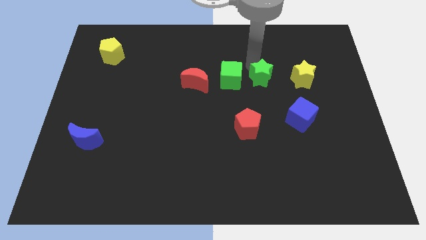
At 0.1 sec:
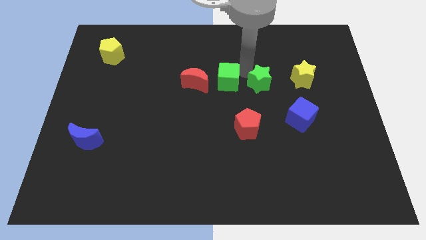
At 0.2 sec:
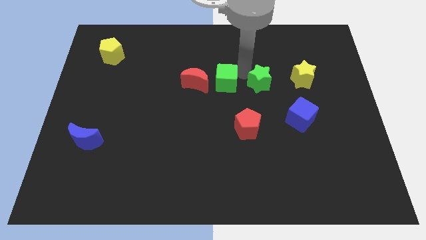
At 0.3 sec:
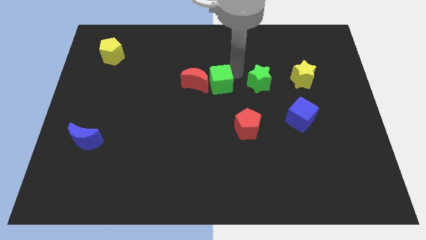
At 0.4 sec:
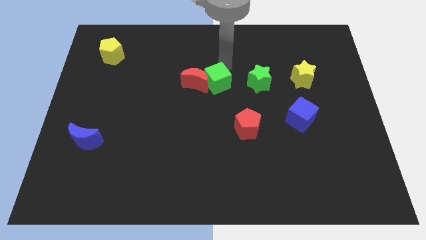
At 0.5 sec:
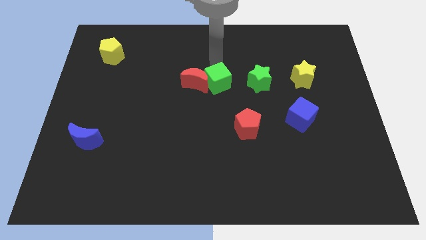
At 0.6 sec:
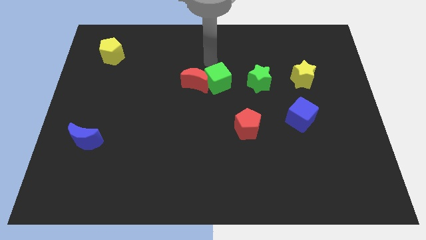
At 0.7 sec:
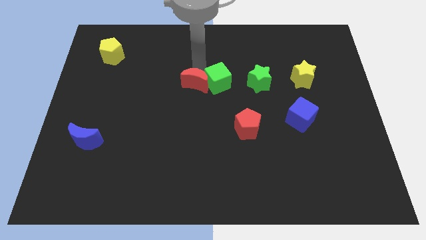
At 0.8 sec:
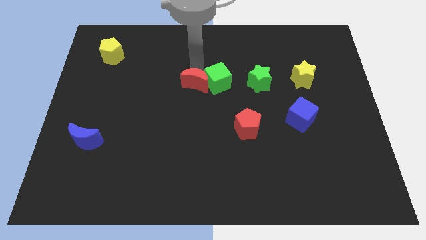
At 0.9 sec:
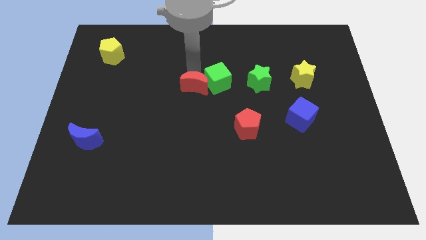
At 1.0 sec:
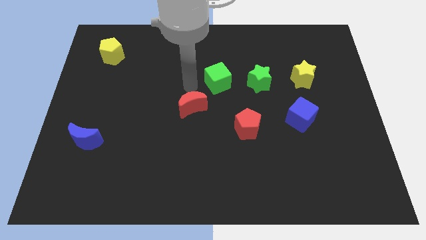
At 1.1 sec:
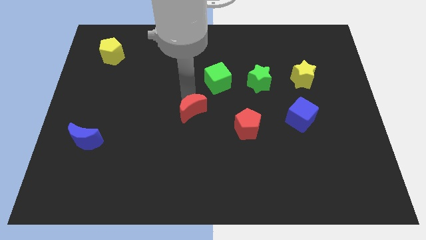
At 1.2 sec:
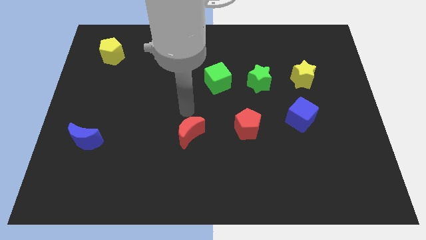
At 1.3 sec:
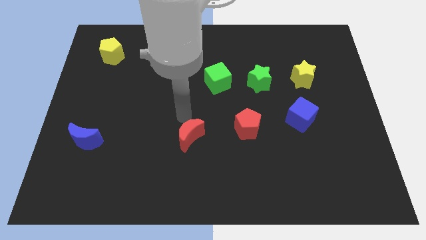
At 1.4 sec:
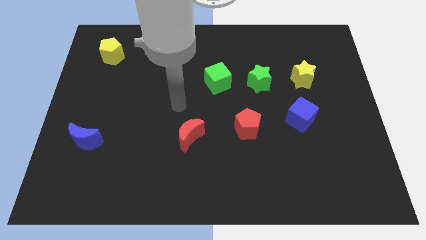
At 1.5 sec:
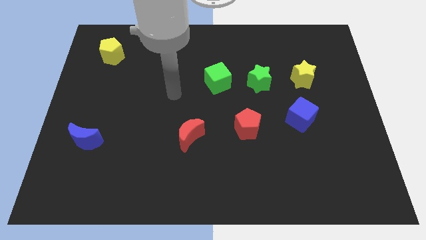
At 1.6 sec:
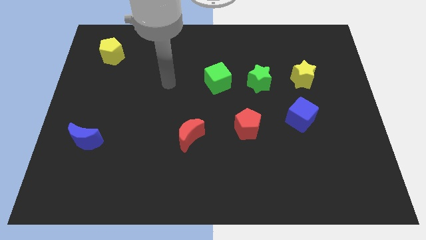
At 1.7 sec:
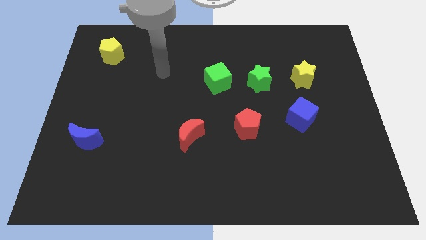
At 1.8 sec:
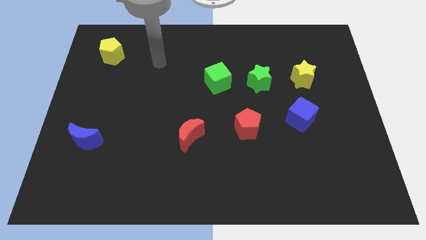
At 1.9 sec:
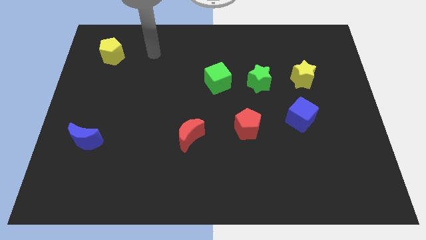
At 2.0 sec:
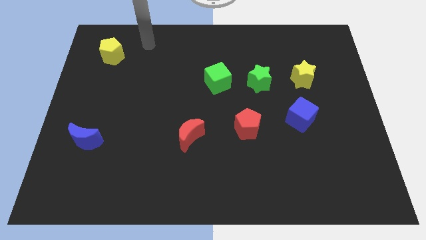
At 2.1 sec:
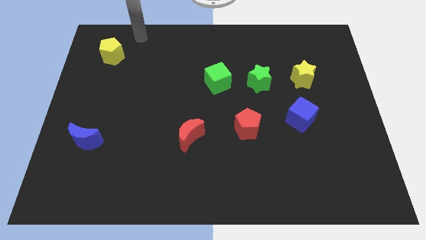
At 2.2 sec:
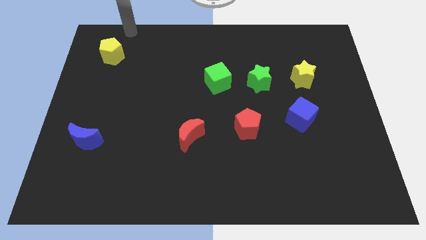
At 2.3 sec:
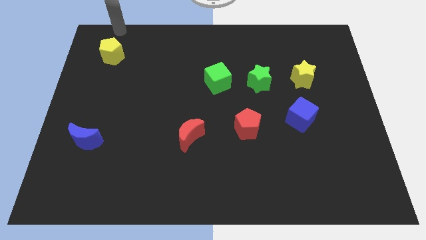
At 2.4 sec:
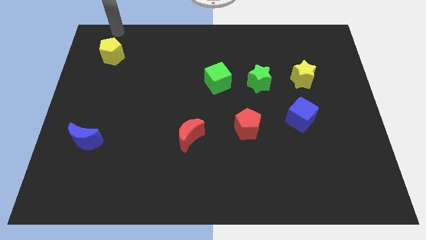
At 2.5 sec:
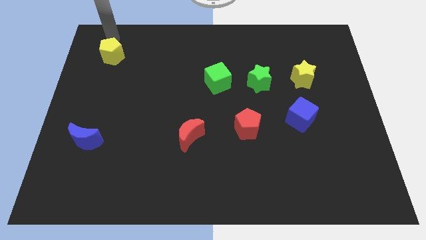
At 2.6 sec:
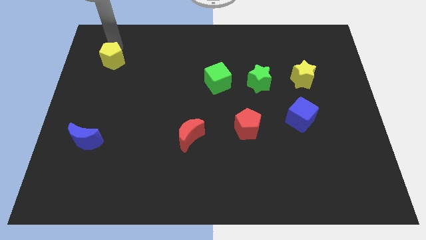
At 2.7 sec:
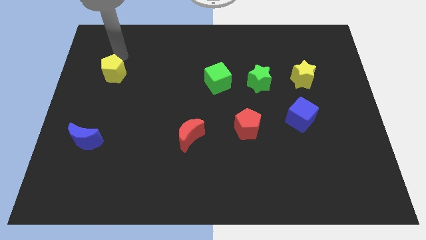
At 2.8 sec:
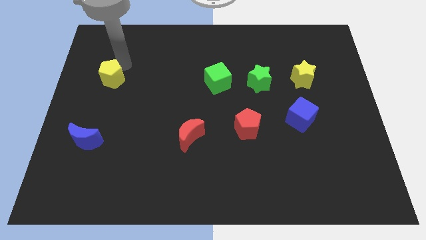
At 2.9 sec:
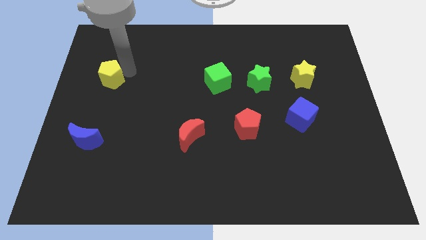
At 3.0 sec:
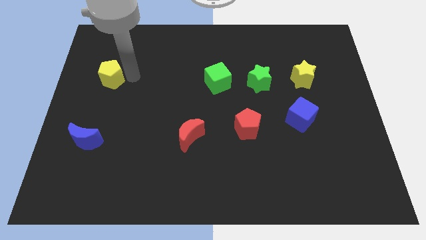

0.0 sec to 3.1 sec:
put the red crescent to the right of the blue crescent

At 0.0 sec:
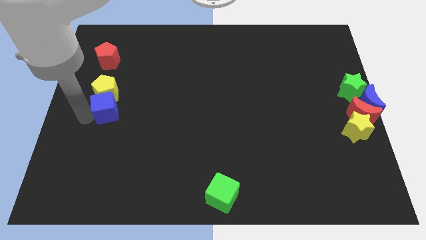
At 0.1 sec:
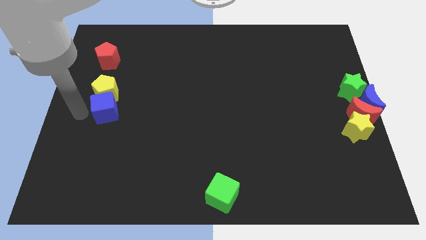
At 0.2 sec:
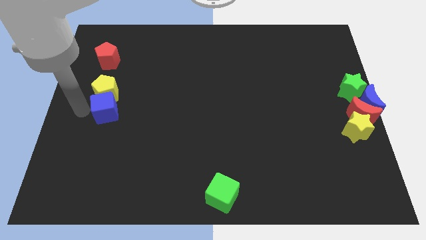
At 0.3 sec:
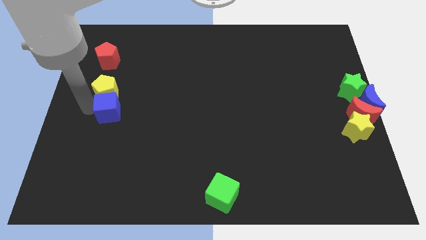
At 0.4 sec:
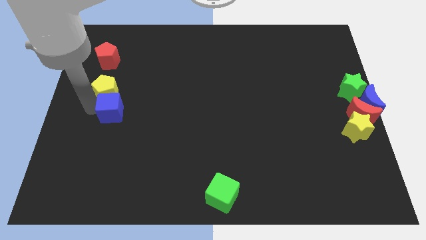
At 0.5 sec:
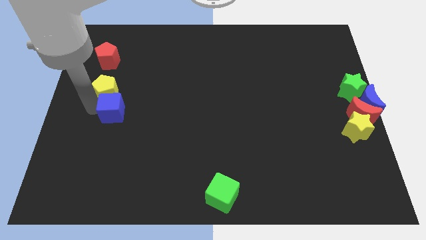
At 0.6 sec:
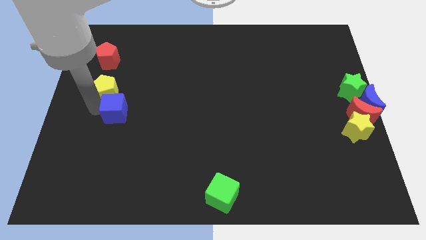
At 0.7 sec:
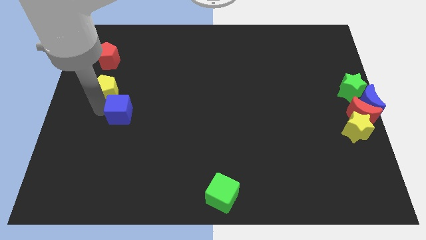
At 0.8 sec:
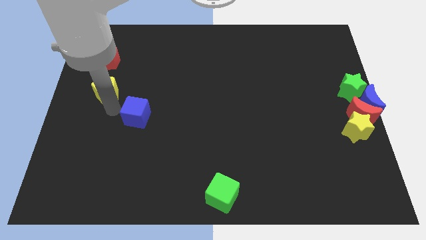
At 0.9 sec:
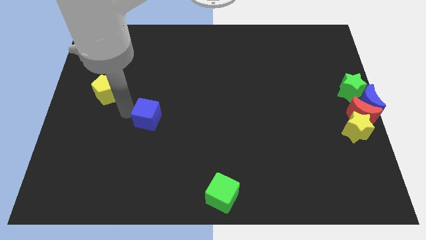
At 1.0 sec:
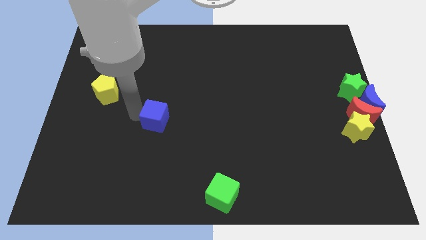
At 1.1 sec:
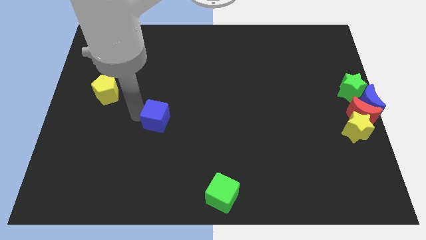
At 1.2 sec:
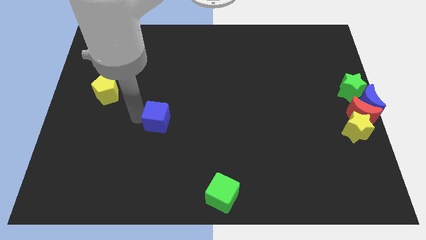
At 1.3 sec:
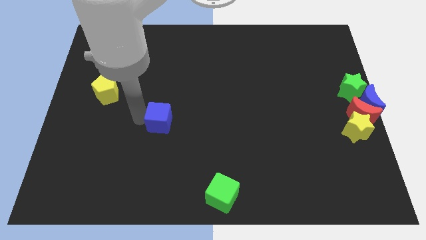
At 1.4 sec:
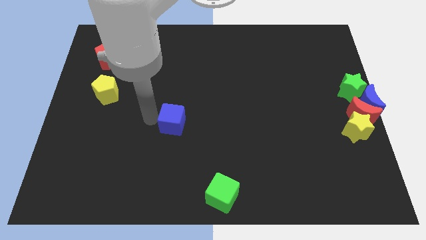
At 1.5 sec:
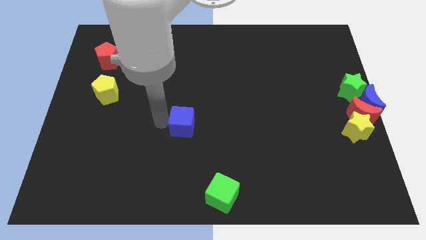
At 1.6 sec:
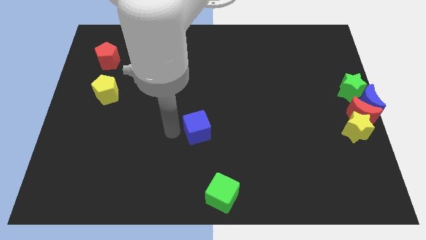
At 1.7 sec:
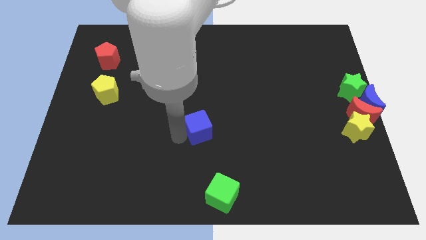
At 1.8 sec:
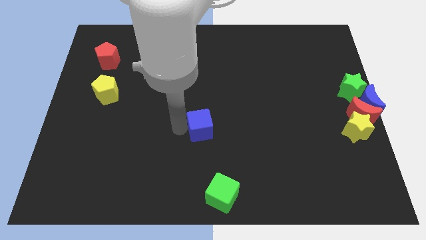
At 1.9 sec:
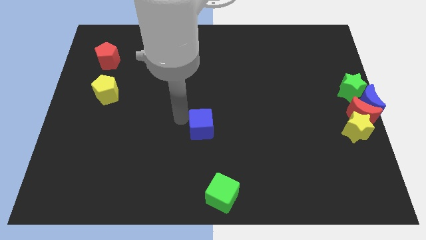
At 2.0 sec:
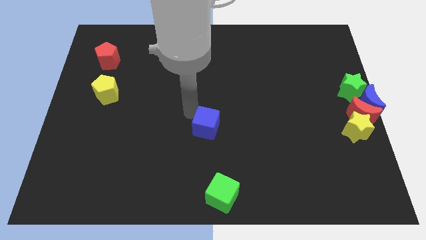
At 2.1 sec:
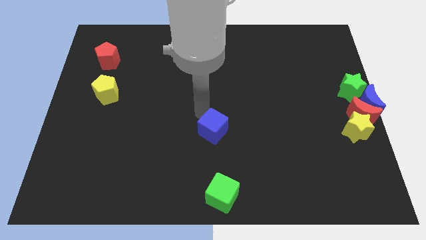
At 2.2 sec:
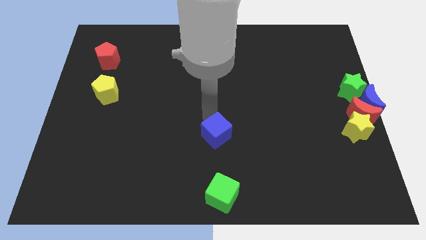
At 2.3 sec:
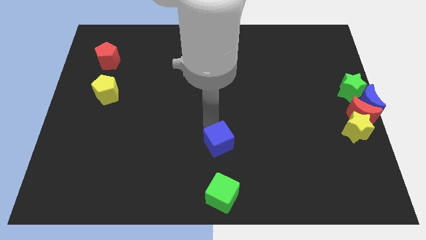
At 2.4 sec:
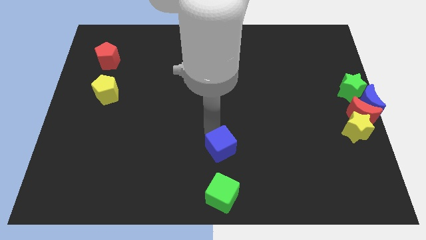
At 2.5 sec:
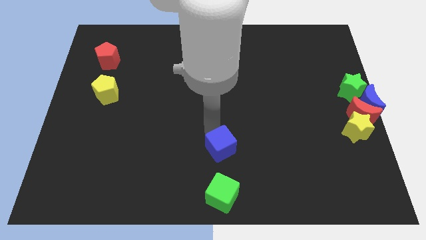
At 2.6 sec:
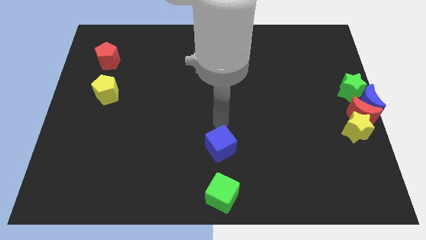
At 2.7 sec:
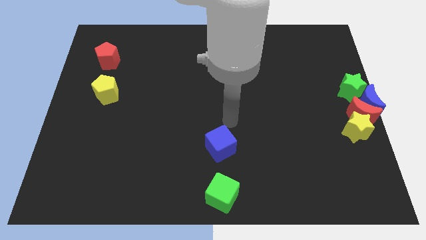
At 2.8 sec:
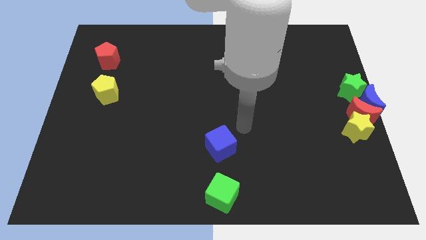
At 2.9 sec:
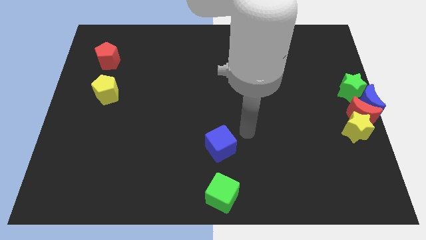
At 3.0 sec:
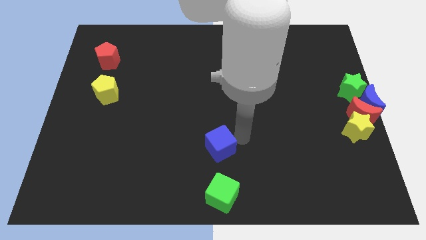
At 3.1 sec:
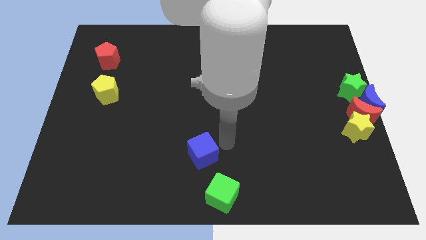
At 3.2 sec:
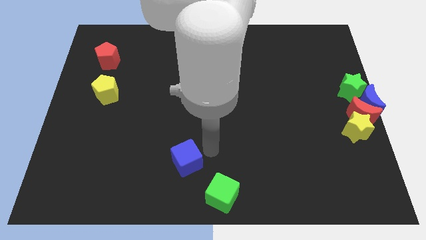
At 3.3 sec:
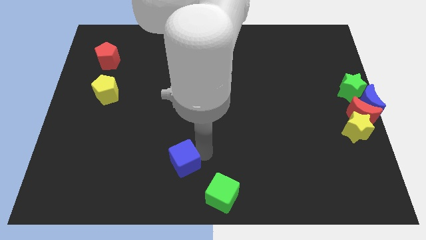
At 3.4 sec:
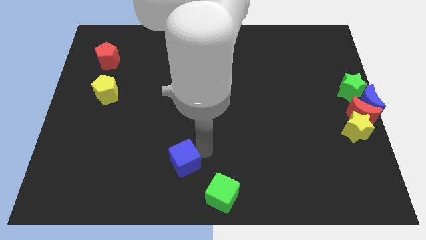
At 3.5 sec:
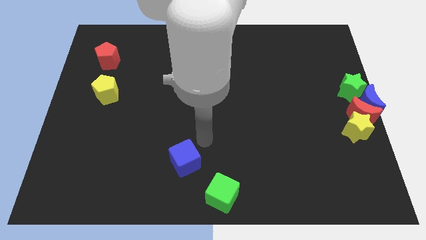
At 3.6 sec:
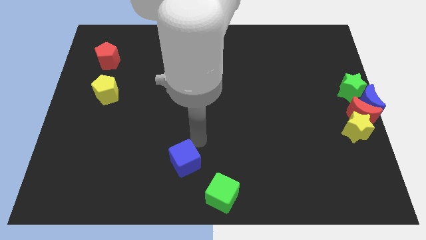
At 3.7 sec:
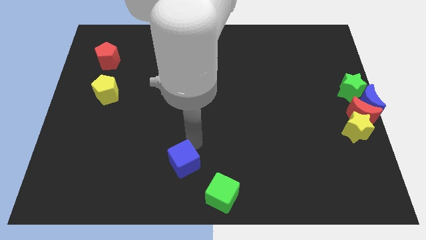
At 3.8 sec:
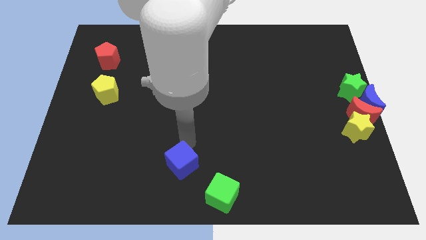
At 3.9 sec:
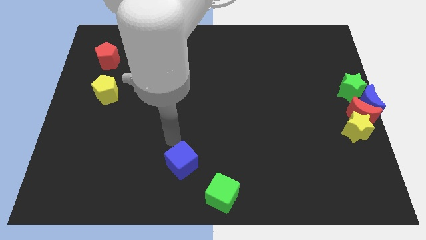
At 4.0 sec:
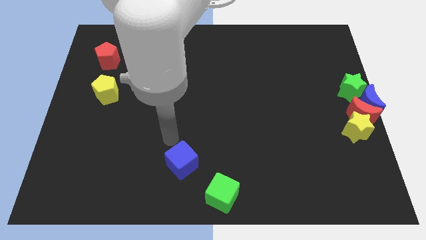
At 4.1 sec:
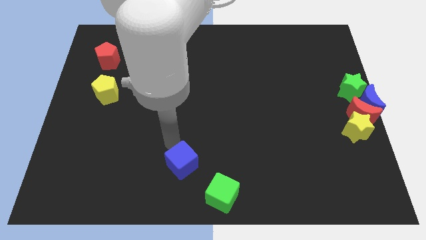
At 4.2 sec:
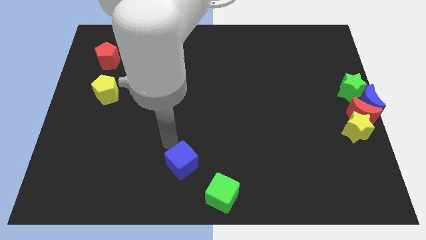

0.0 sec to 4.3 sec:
push the blue cube diagonal top left to the green cube

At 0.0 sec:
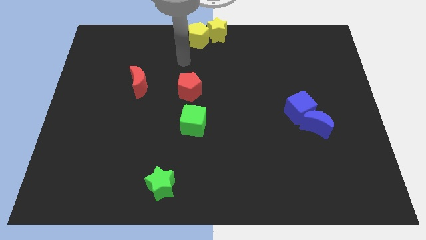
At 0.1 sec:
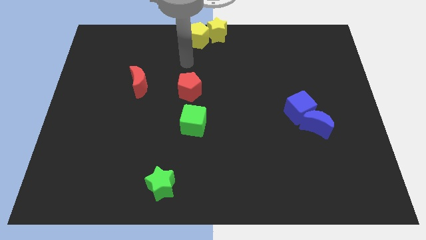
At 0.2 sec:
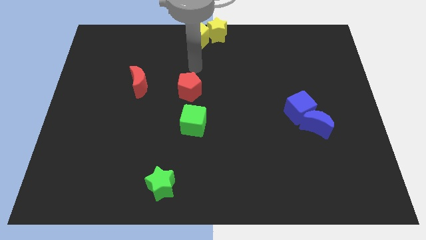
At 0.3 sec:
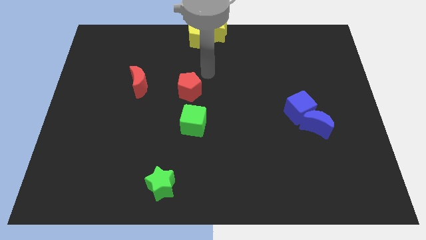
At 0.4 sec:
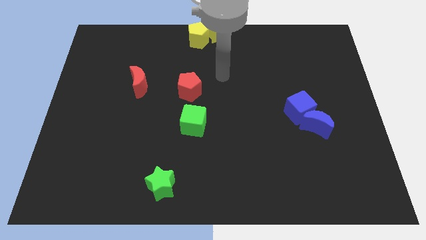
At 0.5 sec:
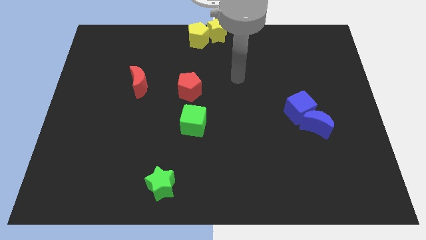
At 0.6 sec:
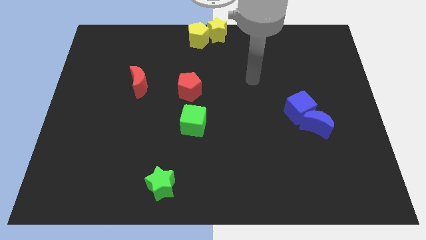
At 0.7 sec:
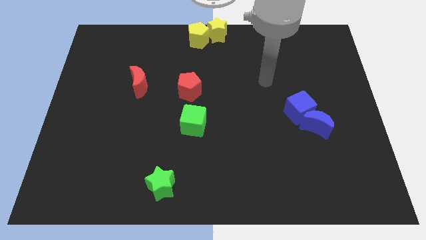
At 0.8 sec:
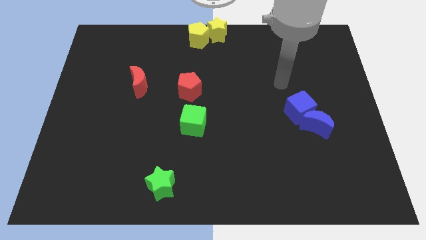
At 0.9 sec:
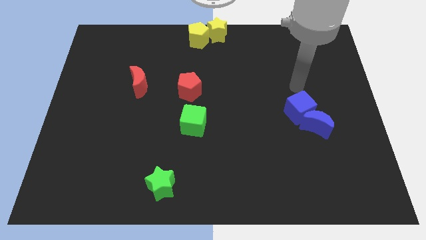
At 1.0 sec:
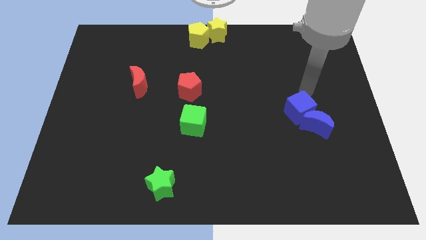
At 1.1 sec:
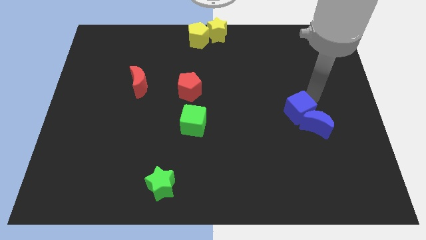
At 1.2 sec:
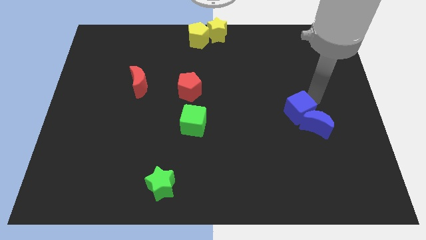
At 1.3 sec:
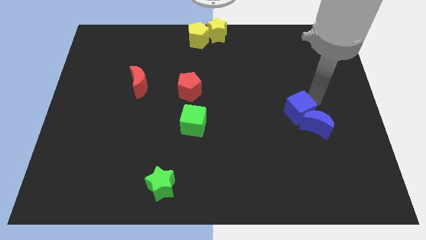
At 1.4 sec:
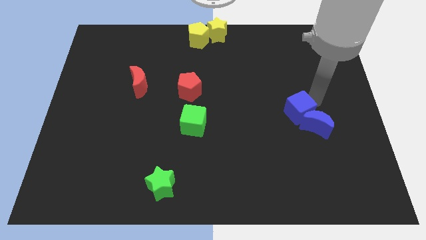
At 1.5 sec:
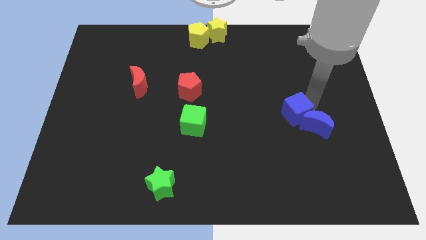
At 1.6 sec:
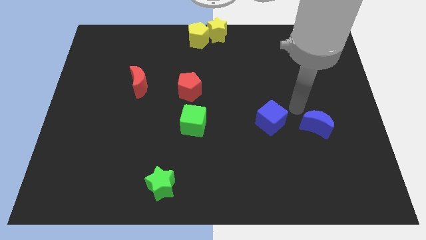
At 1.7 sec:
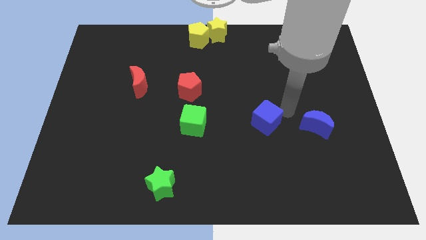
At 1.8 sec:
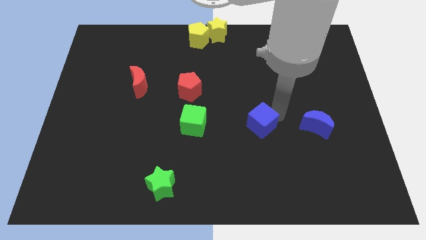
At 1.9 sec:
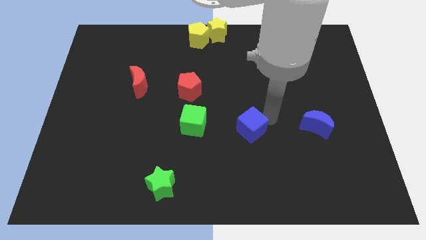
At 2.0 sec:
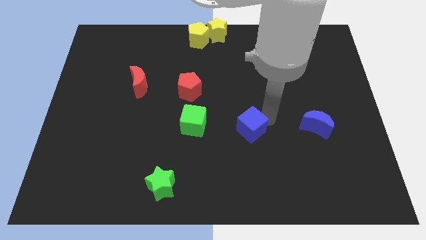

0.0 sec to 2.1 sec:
push the blue cube to the right of green cube
